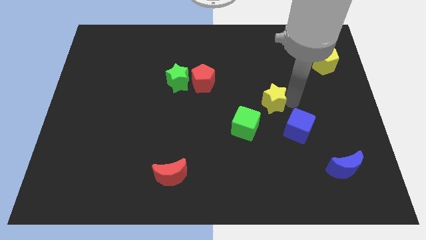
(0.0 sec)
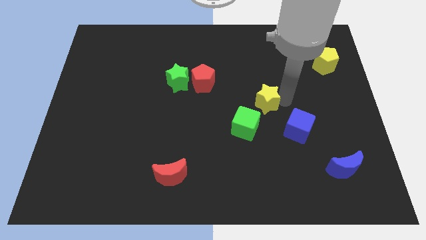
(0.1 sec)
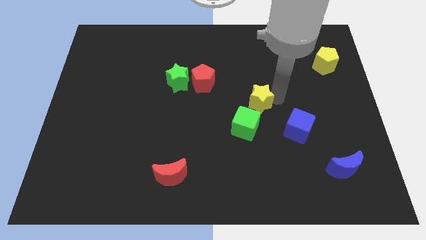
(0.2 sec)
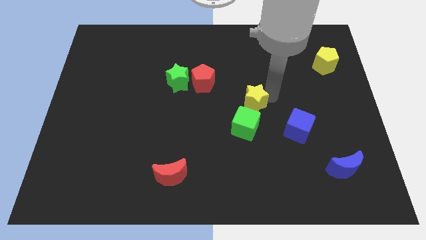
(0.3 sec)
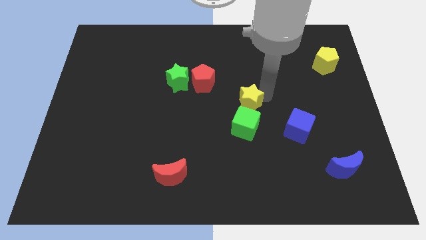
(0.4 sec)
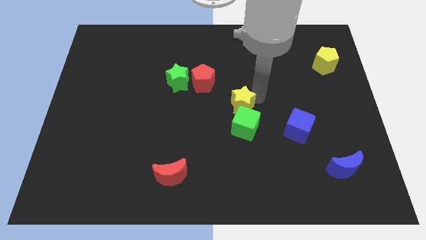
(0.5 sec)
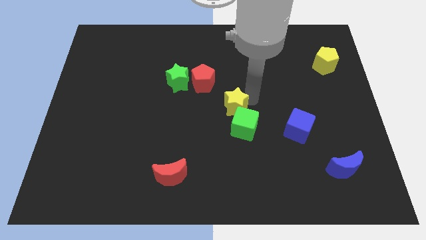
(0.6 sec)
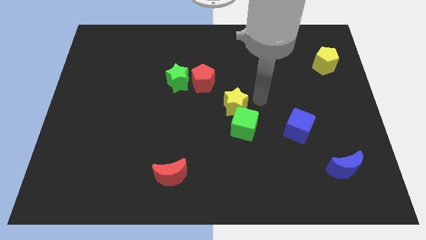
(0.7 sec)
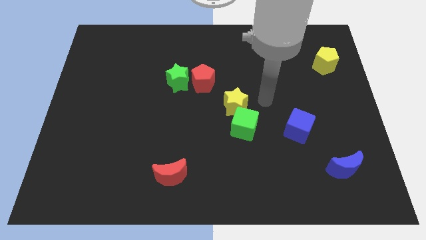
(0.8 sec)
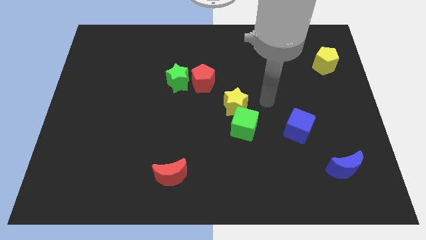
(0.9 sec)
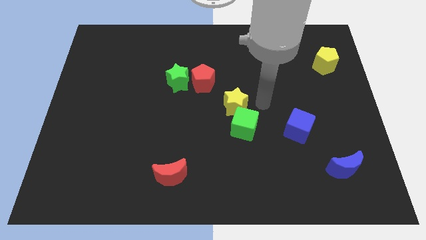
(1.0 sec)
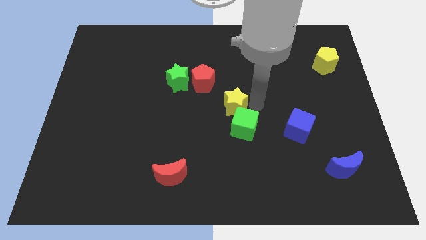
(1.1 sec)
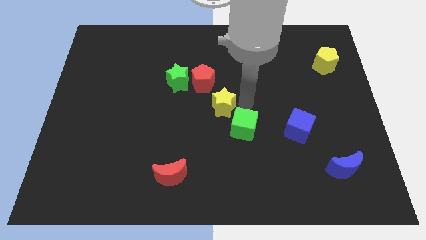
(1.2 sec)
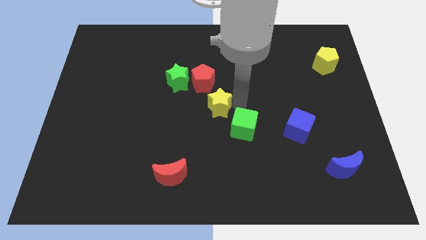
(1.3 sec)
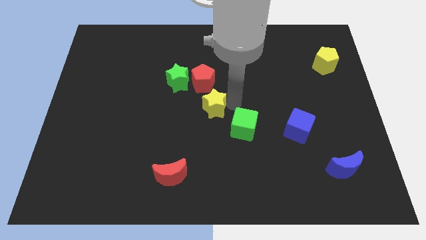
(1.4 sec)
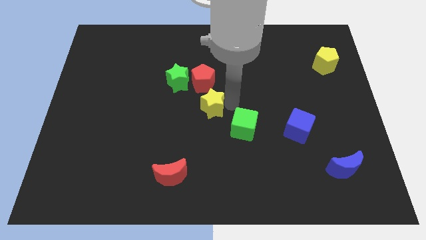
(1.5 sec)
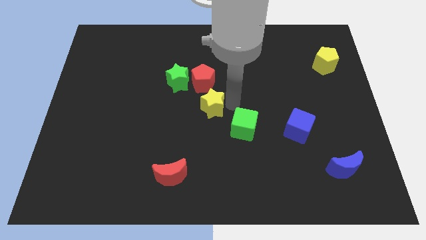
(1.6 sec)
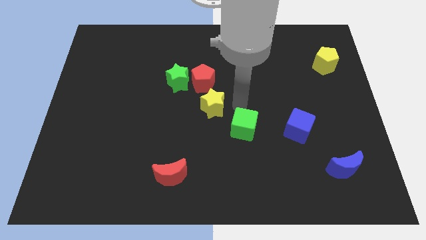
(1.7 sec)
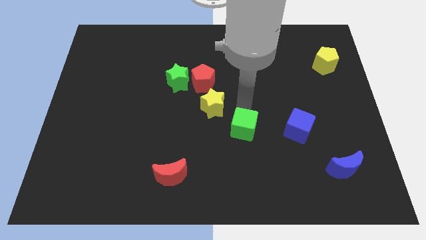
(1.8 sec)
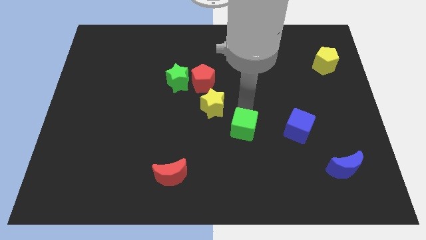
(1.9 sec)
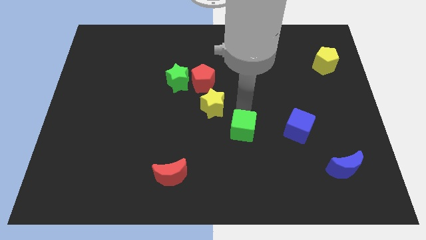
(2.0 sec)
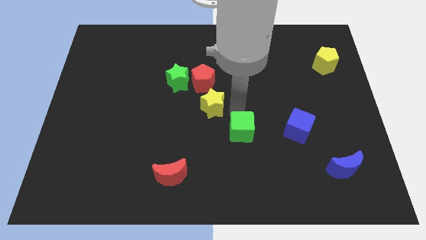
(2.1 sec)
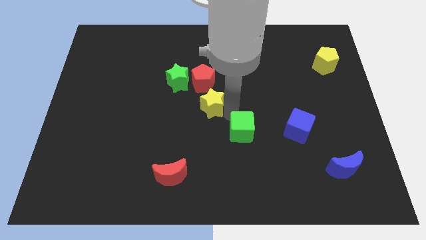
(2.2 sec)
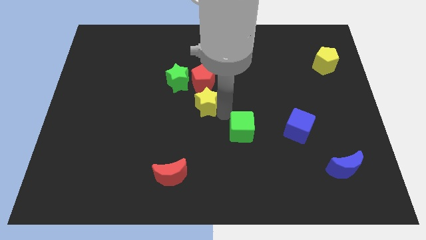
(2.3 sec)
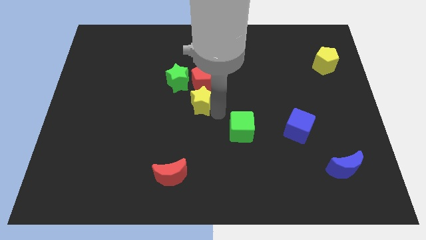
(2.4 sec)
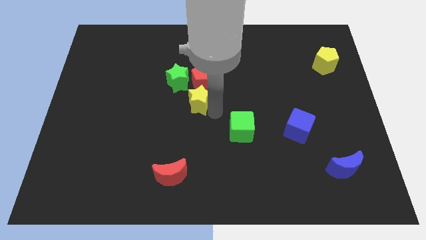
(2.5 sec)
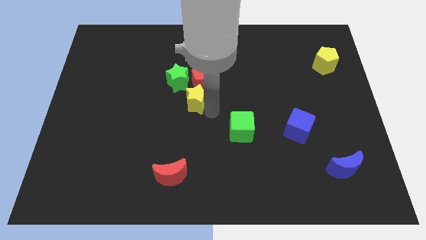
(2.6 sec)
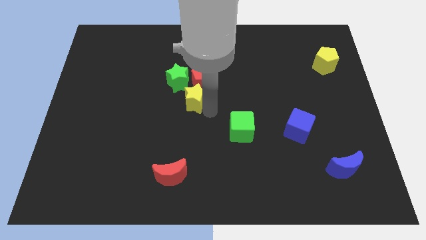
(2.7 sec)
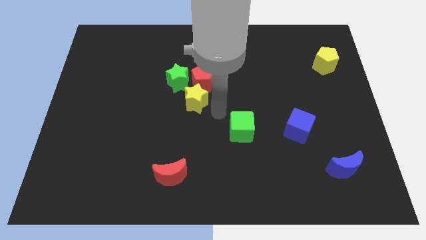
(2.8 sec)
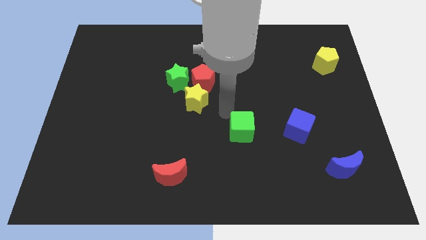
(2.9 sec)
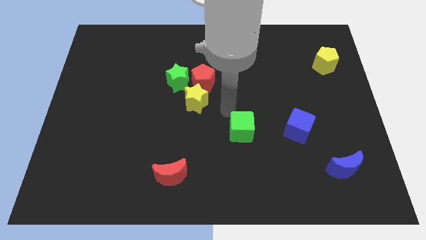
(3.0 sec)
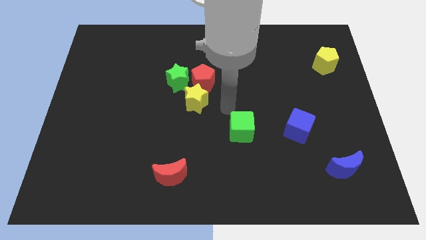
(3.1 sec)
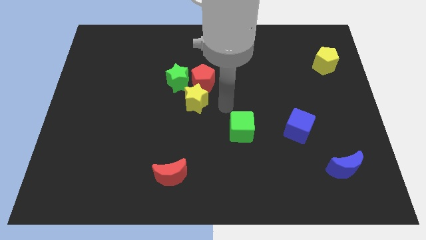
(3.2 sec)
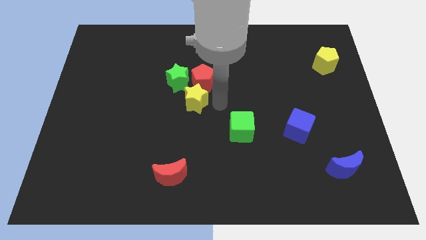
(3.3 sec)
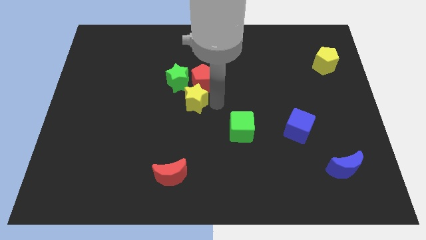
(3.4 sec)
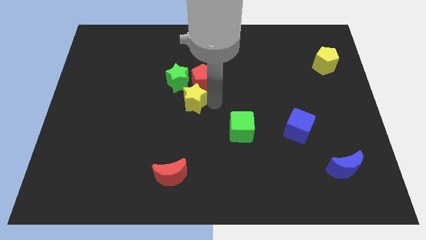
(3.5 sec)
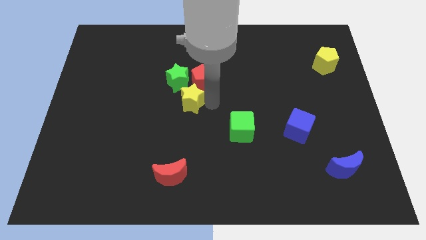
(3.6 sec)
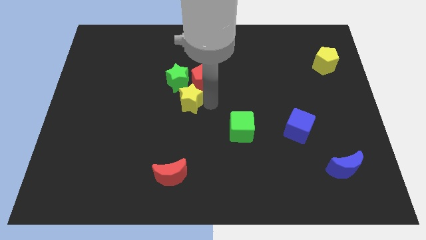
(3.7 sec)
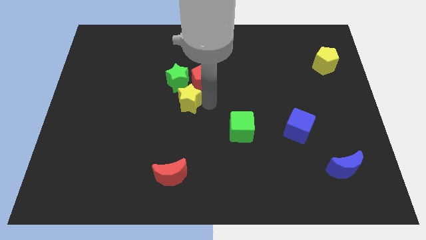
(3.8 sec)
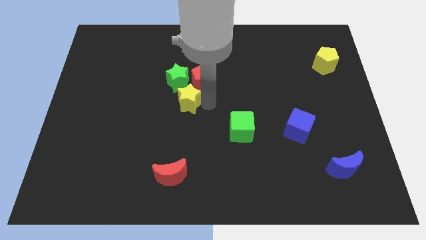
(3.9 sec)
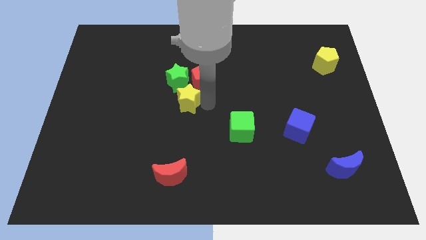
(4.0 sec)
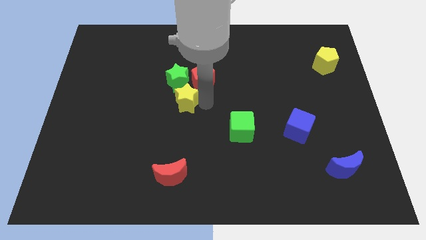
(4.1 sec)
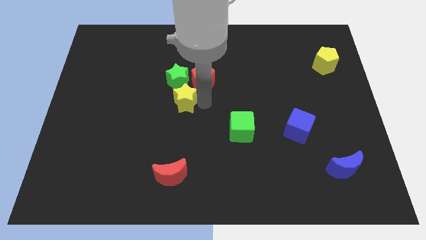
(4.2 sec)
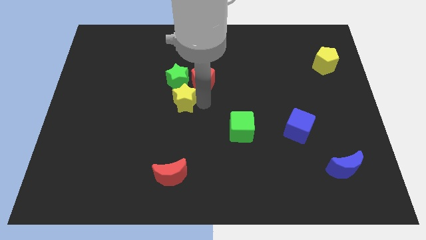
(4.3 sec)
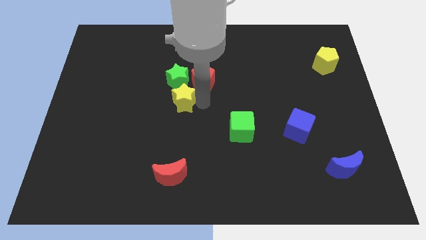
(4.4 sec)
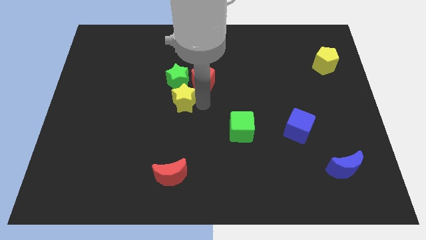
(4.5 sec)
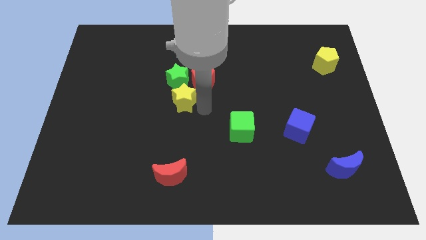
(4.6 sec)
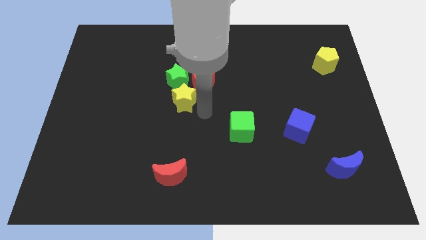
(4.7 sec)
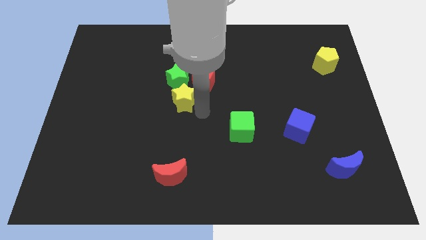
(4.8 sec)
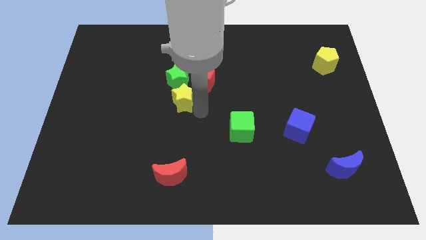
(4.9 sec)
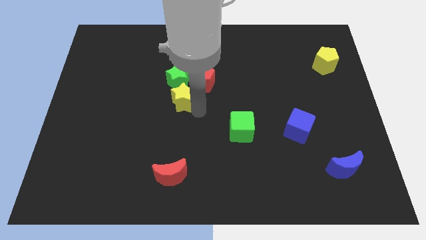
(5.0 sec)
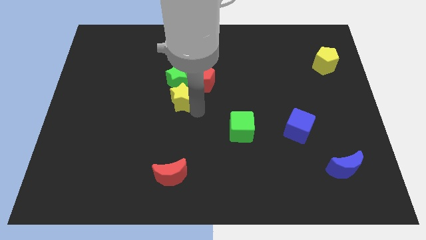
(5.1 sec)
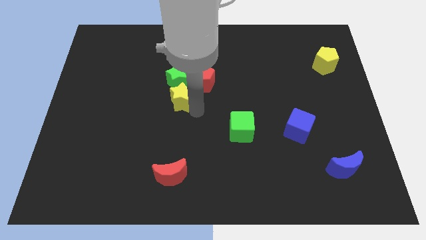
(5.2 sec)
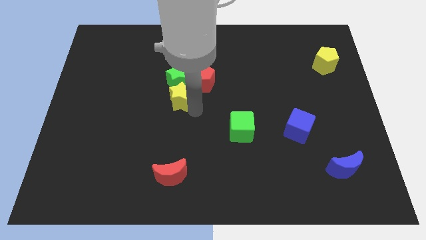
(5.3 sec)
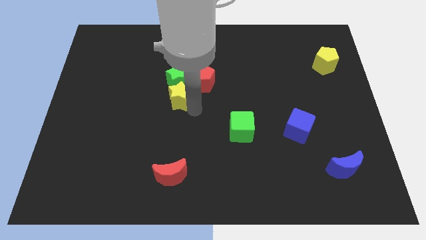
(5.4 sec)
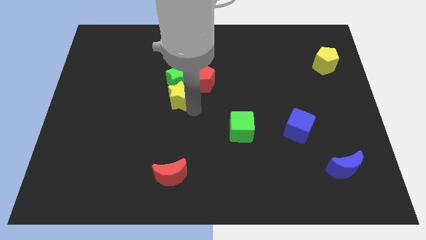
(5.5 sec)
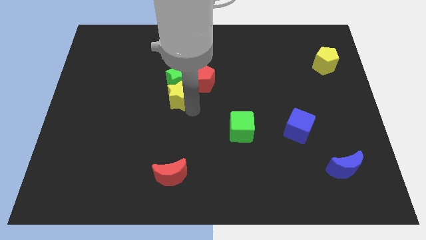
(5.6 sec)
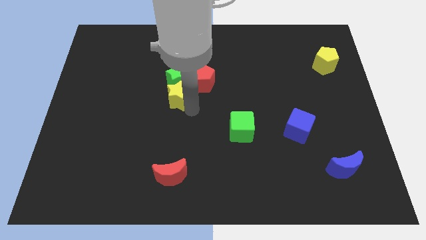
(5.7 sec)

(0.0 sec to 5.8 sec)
place yellow star below green star

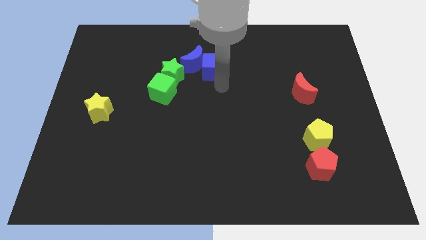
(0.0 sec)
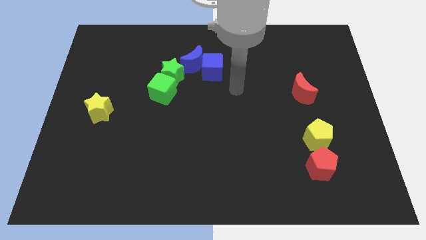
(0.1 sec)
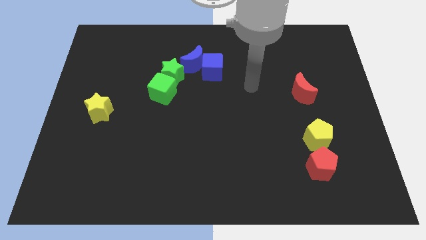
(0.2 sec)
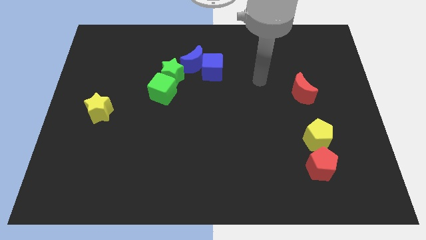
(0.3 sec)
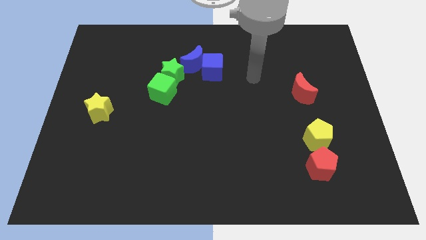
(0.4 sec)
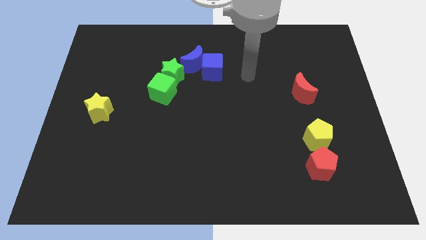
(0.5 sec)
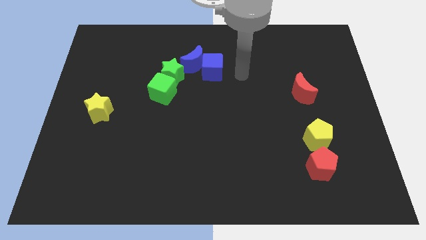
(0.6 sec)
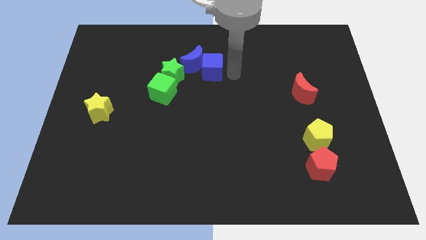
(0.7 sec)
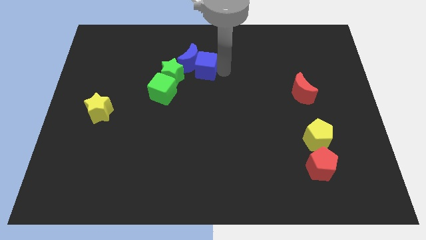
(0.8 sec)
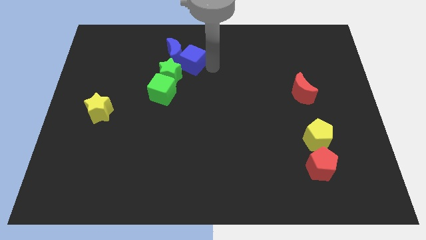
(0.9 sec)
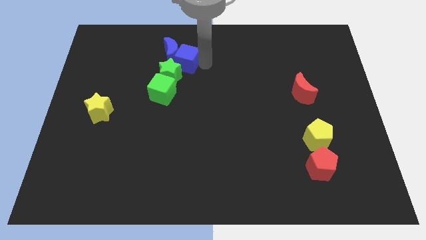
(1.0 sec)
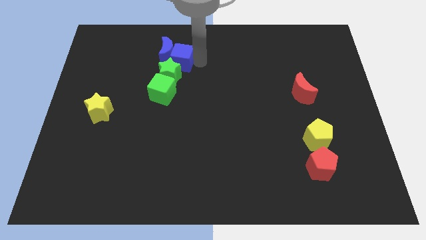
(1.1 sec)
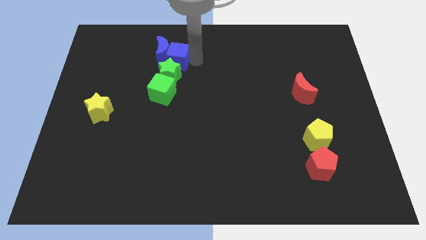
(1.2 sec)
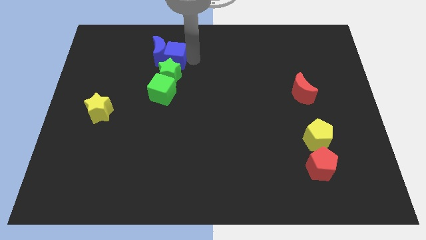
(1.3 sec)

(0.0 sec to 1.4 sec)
put the blue blocks at the top of green star

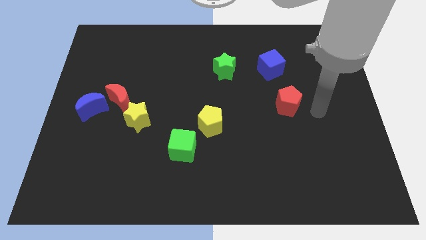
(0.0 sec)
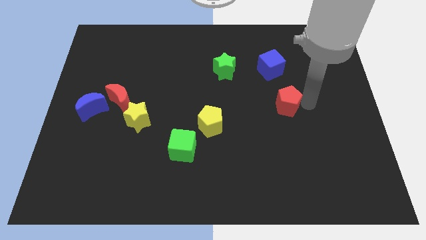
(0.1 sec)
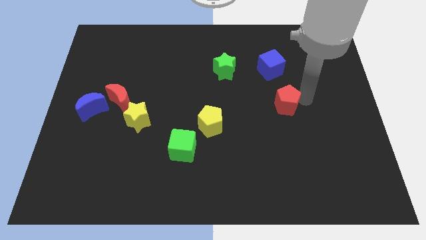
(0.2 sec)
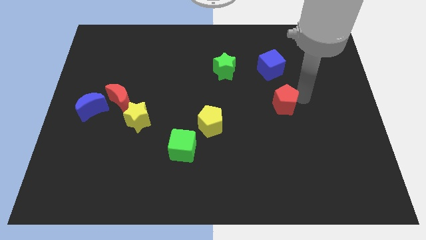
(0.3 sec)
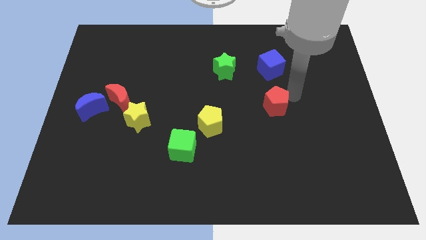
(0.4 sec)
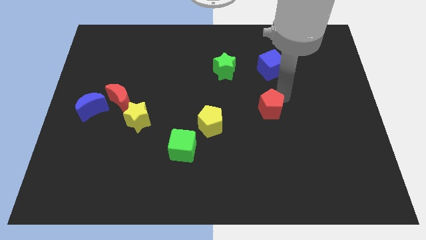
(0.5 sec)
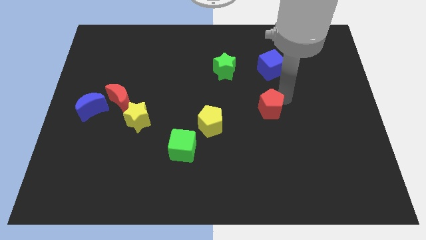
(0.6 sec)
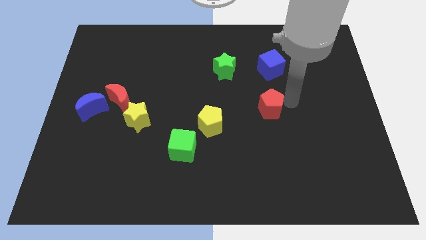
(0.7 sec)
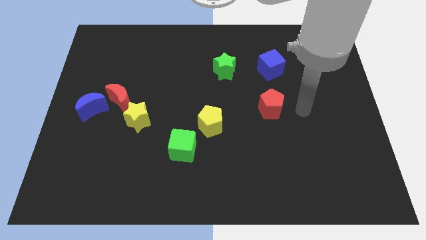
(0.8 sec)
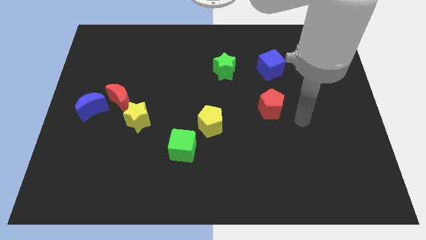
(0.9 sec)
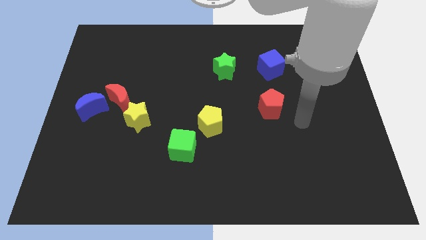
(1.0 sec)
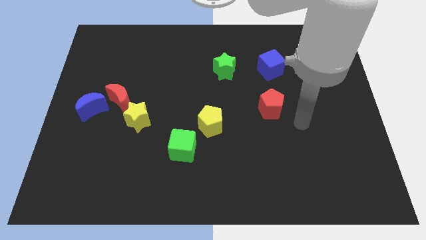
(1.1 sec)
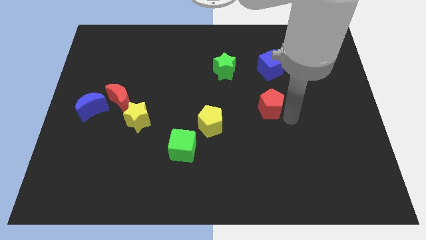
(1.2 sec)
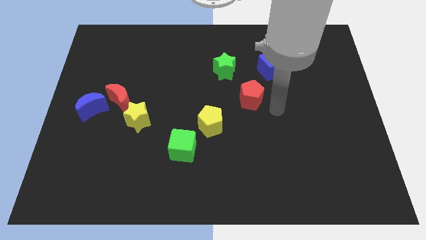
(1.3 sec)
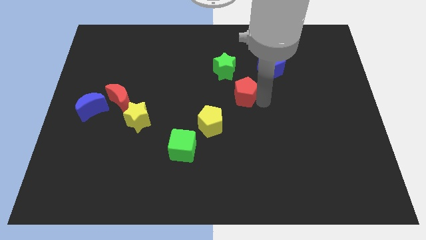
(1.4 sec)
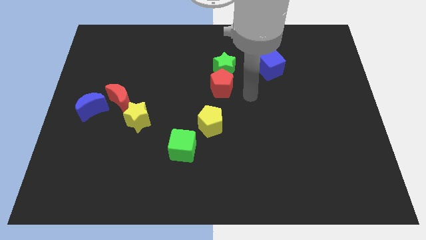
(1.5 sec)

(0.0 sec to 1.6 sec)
place red pentagon below green star

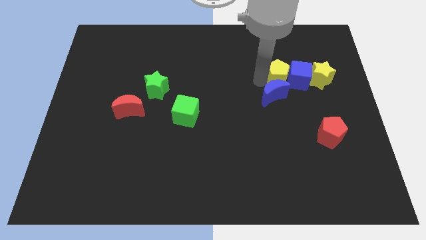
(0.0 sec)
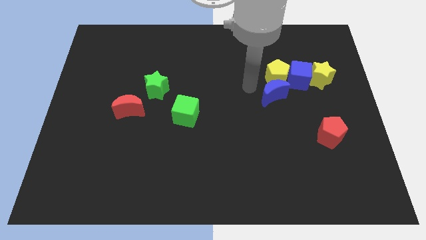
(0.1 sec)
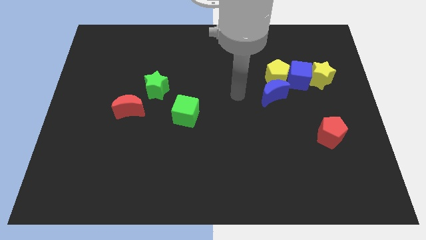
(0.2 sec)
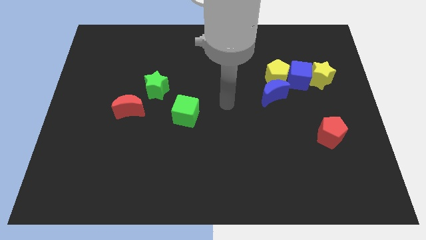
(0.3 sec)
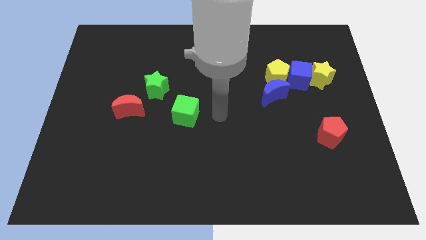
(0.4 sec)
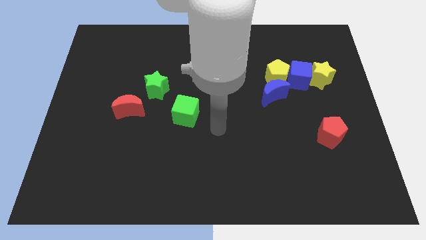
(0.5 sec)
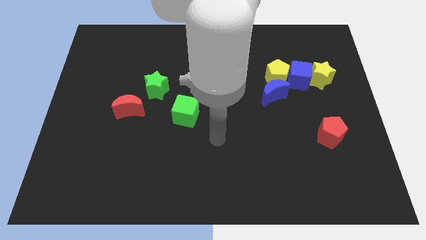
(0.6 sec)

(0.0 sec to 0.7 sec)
move the arm away from the yellow pentagon
